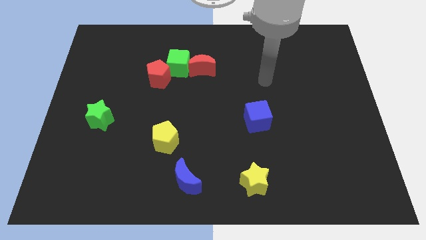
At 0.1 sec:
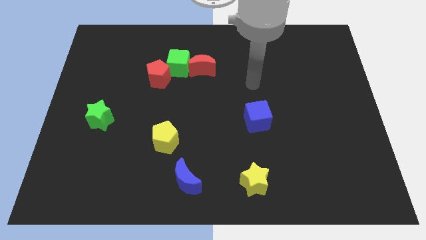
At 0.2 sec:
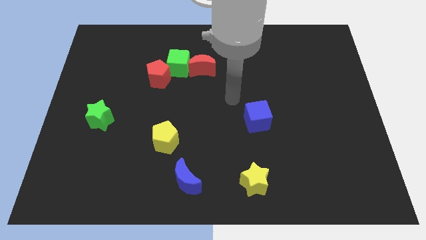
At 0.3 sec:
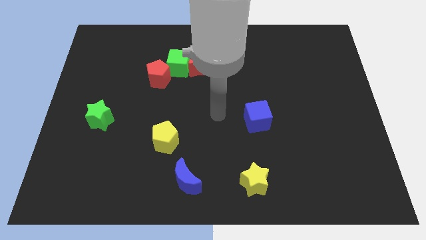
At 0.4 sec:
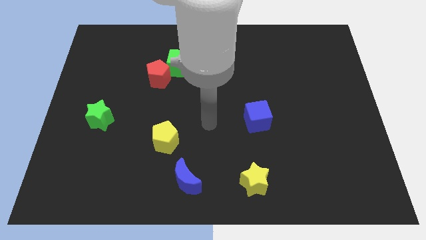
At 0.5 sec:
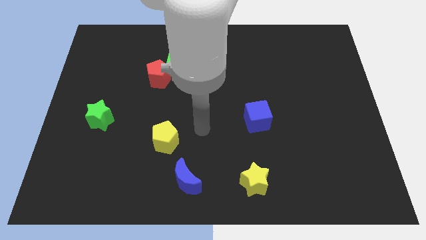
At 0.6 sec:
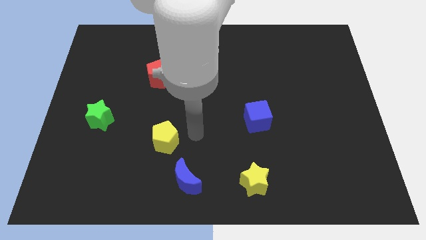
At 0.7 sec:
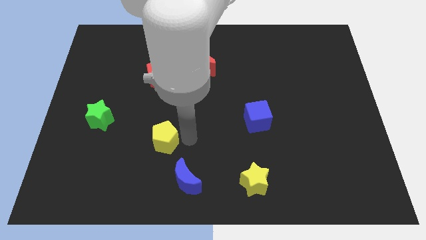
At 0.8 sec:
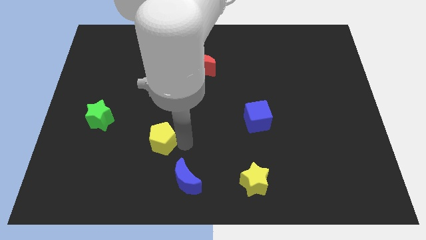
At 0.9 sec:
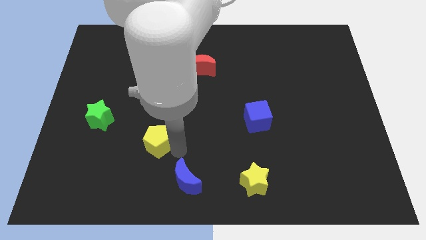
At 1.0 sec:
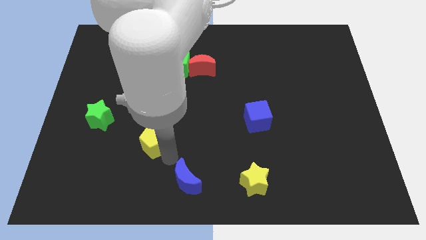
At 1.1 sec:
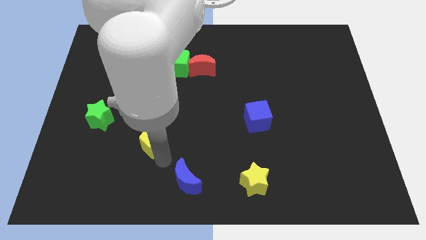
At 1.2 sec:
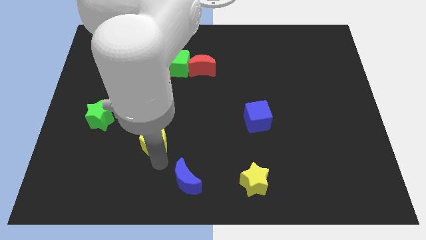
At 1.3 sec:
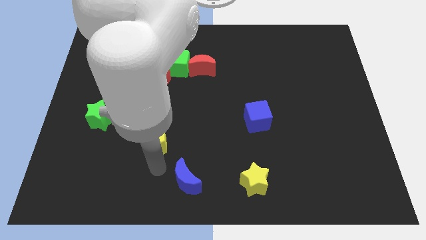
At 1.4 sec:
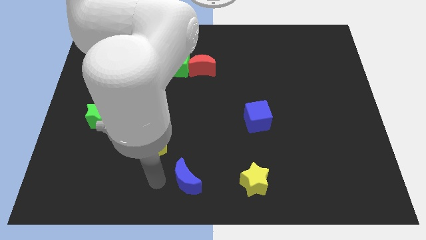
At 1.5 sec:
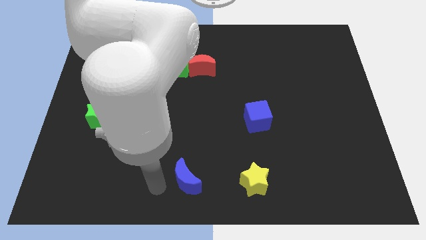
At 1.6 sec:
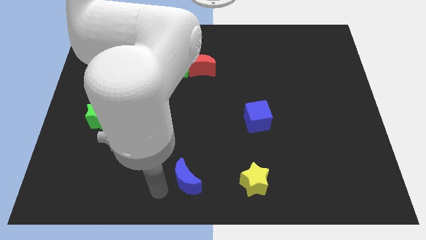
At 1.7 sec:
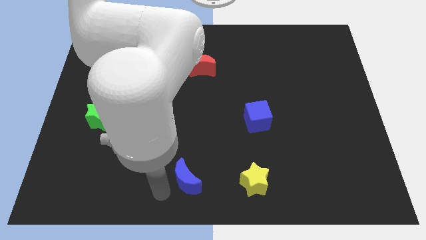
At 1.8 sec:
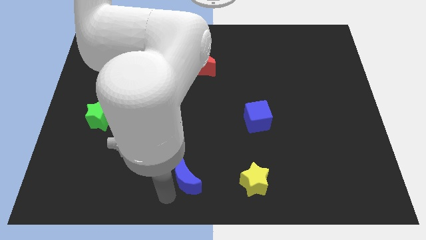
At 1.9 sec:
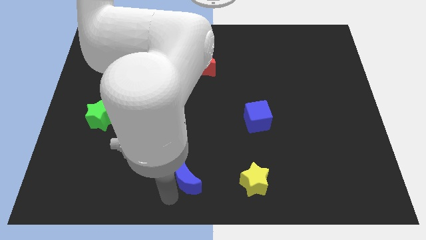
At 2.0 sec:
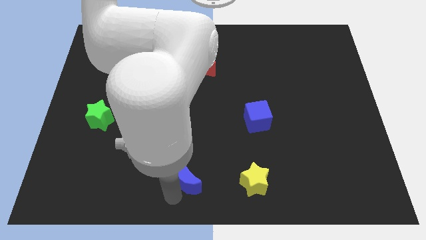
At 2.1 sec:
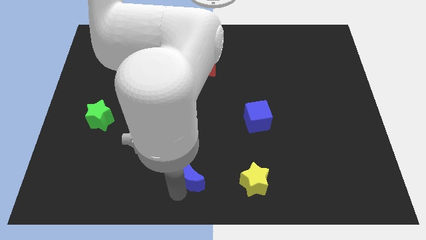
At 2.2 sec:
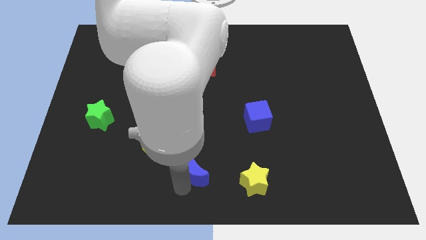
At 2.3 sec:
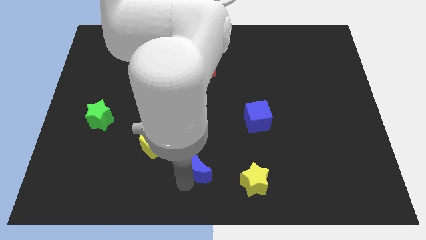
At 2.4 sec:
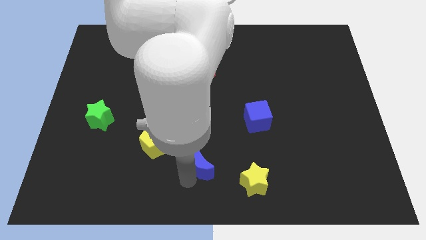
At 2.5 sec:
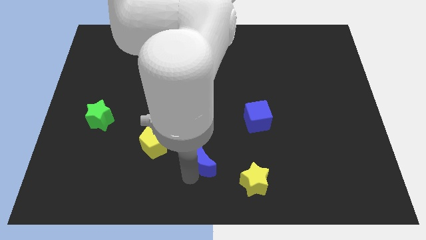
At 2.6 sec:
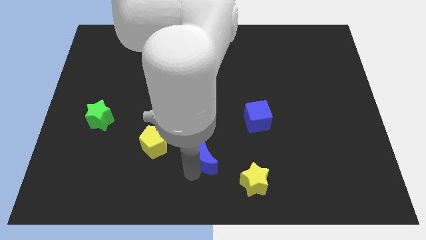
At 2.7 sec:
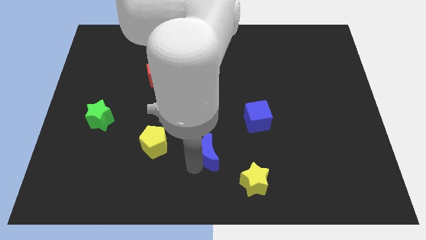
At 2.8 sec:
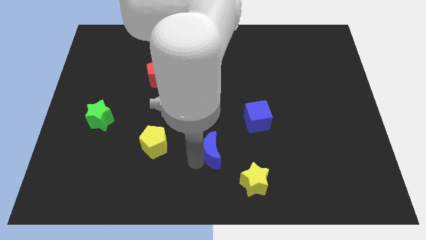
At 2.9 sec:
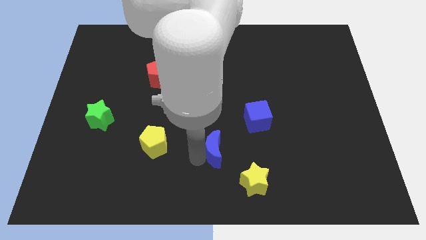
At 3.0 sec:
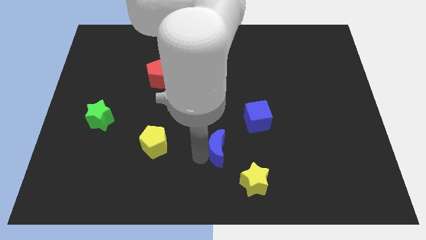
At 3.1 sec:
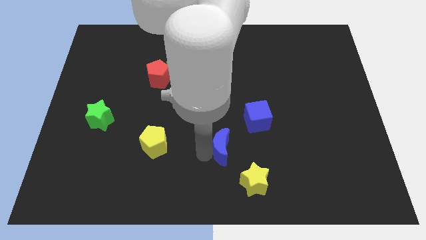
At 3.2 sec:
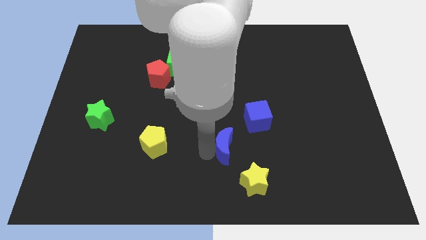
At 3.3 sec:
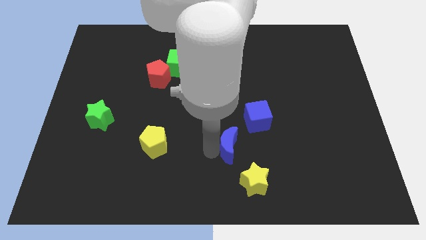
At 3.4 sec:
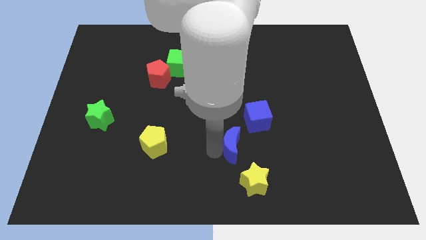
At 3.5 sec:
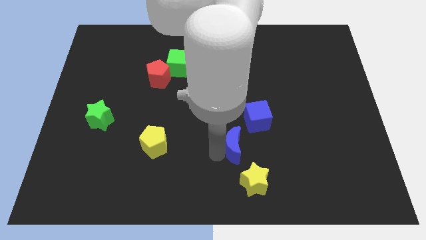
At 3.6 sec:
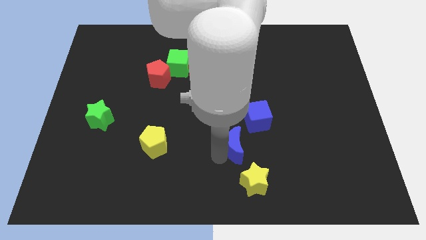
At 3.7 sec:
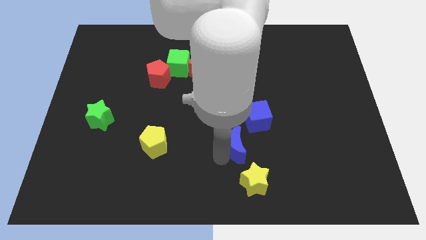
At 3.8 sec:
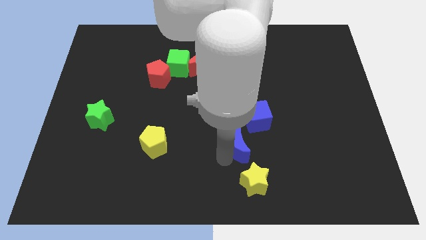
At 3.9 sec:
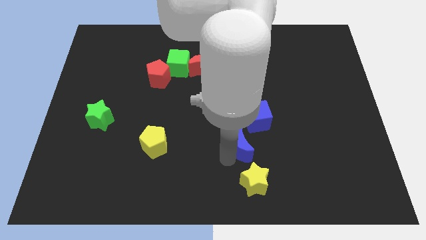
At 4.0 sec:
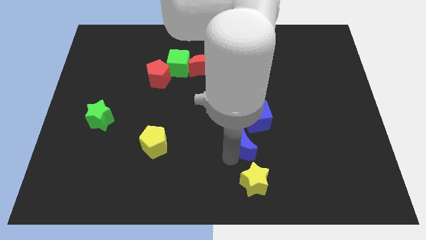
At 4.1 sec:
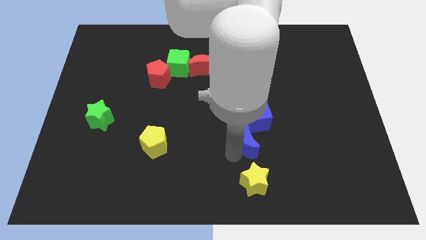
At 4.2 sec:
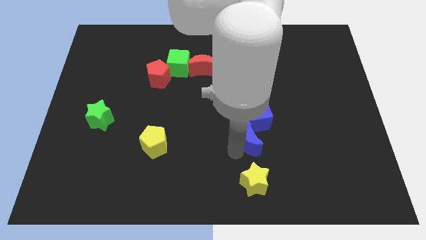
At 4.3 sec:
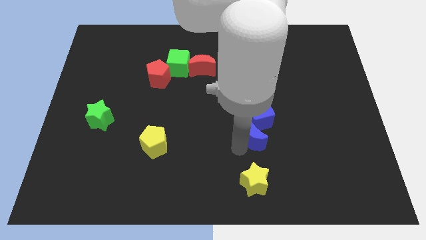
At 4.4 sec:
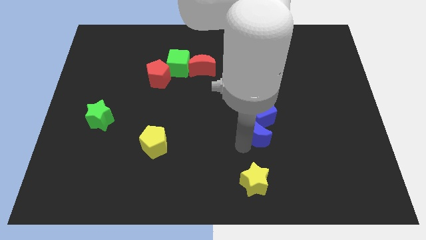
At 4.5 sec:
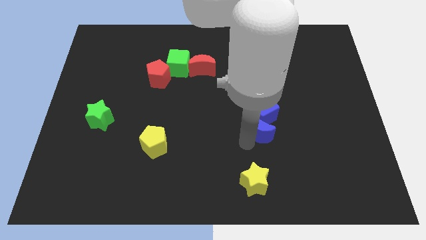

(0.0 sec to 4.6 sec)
push the blue moon next to the blue cube

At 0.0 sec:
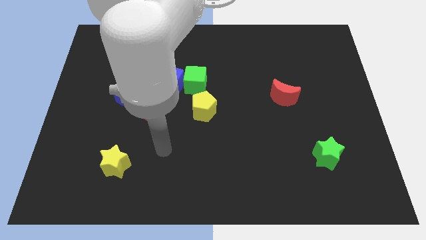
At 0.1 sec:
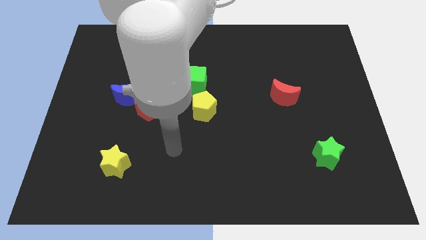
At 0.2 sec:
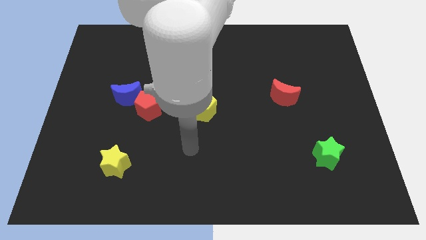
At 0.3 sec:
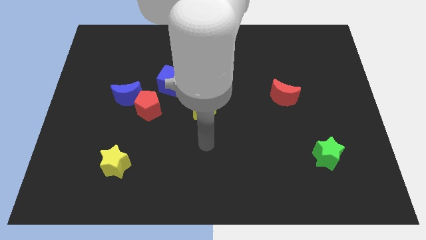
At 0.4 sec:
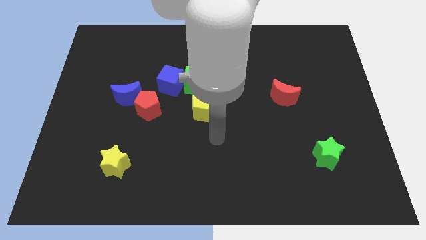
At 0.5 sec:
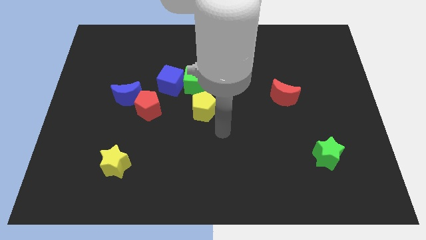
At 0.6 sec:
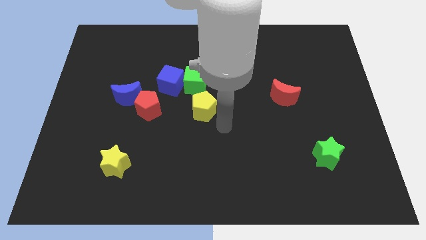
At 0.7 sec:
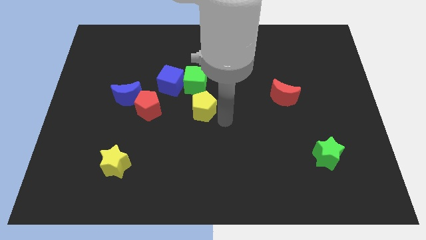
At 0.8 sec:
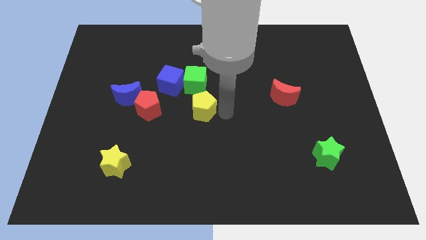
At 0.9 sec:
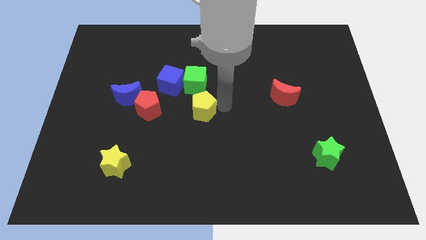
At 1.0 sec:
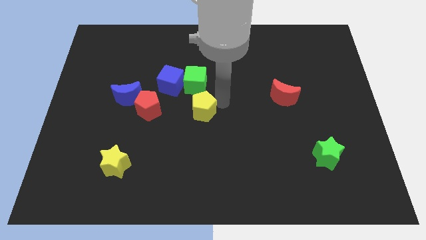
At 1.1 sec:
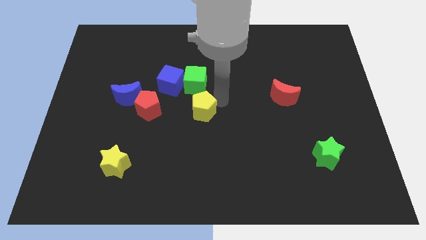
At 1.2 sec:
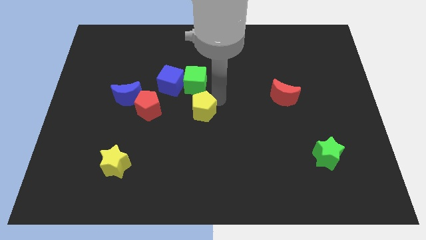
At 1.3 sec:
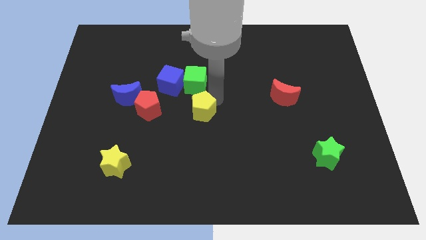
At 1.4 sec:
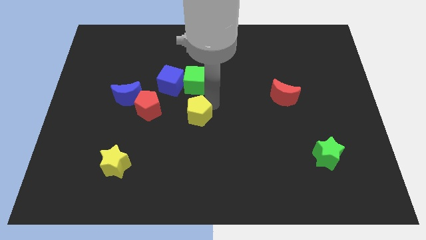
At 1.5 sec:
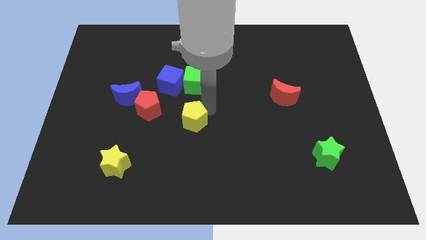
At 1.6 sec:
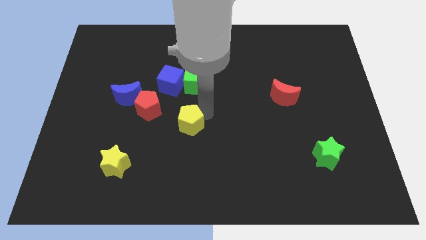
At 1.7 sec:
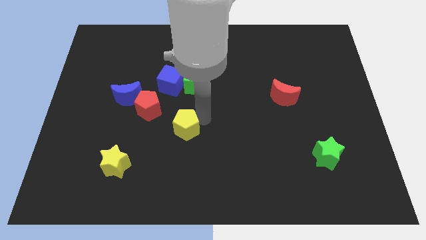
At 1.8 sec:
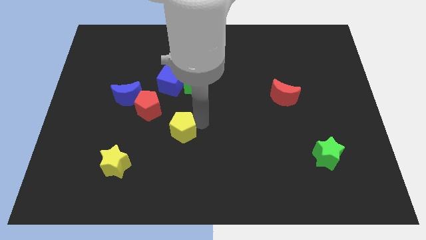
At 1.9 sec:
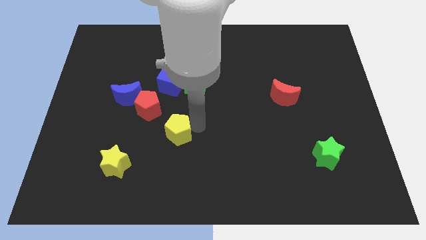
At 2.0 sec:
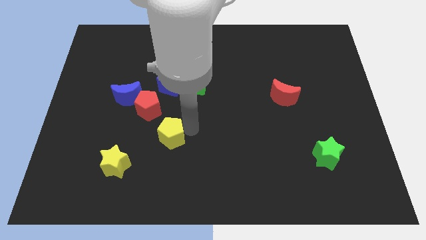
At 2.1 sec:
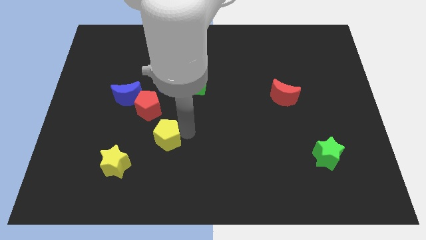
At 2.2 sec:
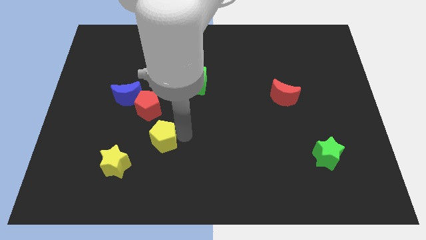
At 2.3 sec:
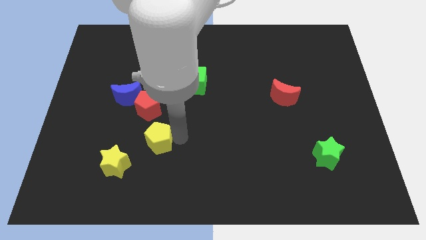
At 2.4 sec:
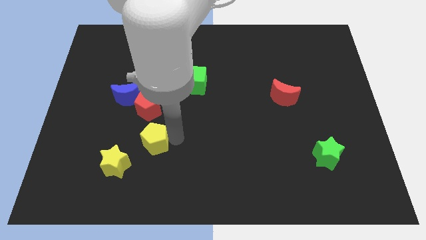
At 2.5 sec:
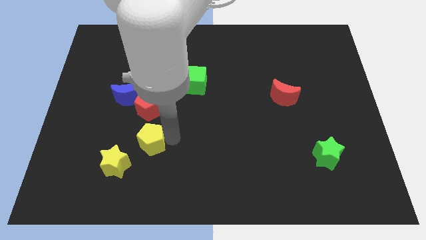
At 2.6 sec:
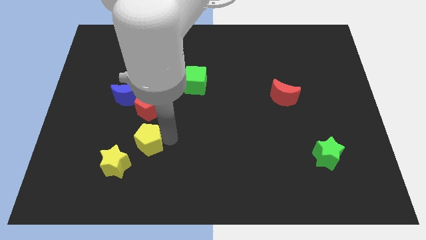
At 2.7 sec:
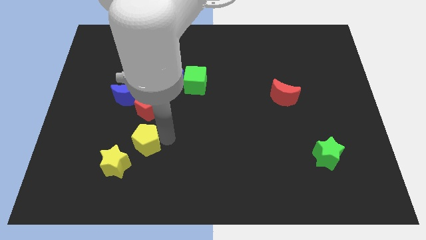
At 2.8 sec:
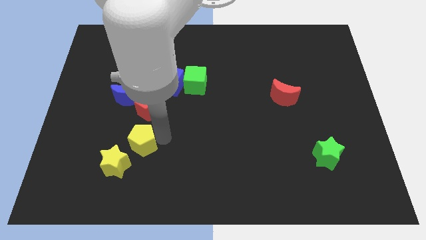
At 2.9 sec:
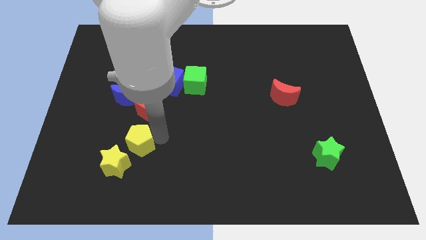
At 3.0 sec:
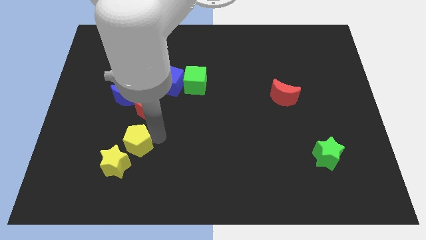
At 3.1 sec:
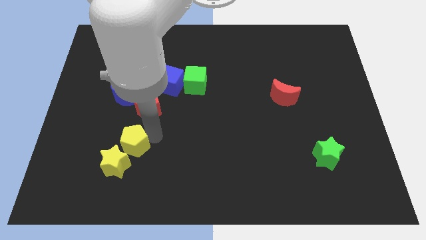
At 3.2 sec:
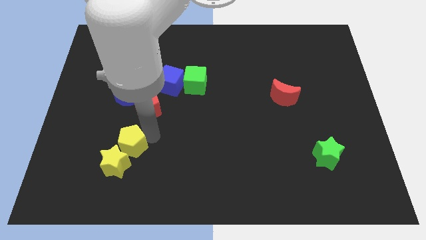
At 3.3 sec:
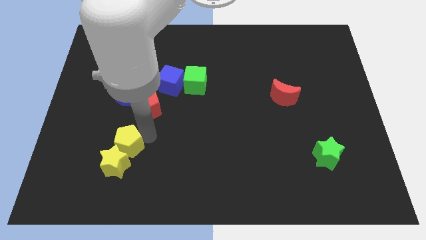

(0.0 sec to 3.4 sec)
put the yellow pentagon next to the yellow star
